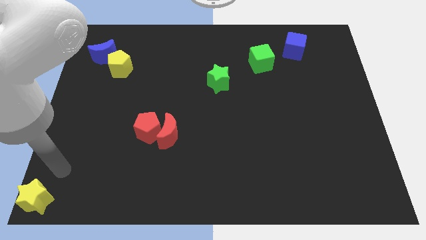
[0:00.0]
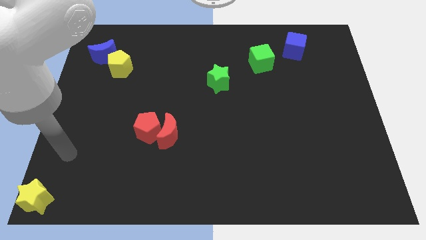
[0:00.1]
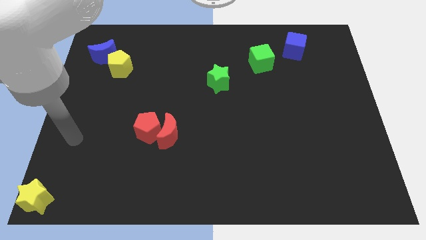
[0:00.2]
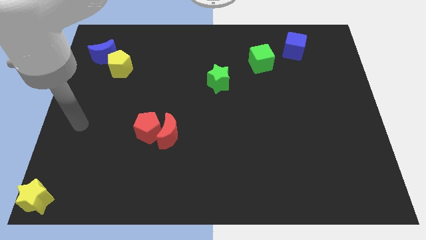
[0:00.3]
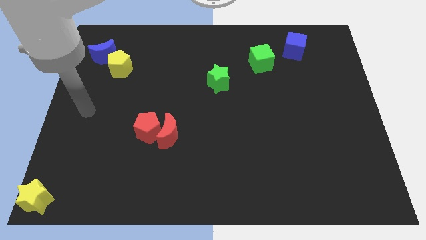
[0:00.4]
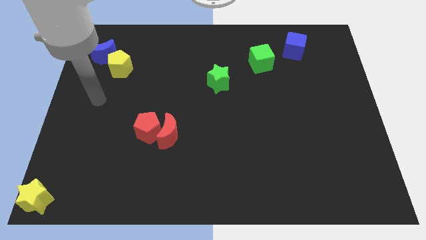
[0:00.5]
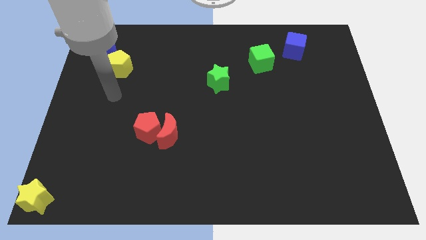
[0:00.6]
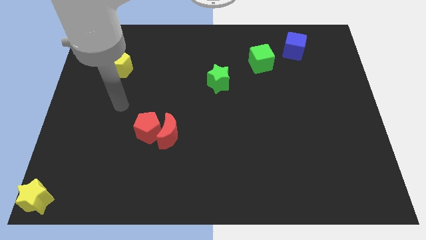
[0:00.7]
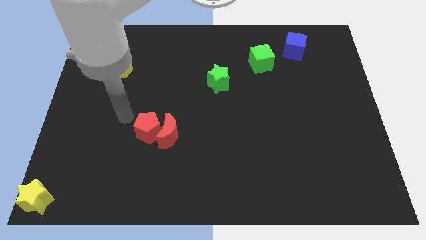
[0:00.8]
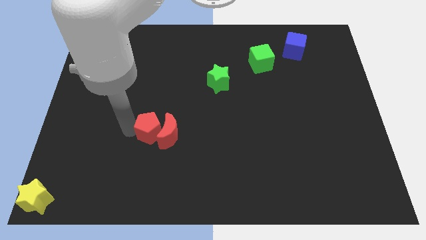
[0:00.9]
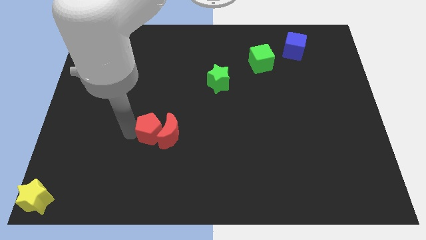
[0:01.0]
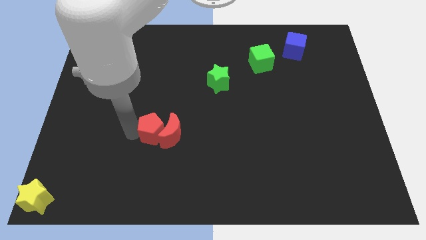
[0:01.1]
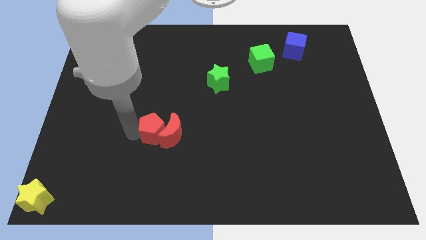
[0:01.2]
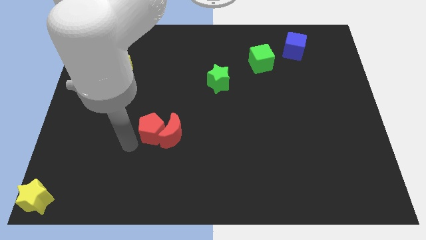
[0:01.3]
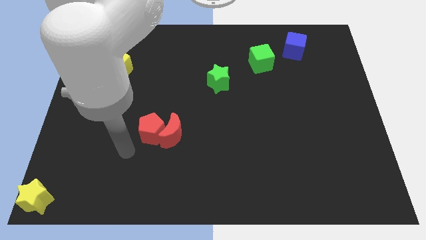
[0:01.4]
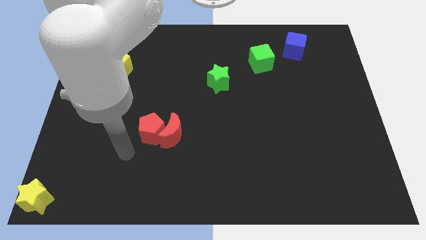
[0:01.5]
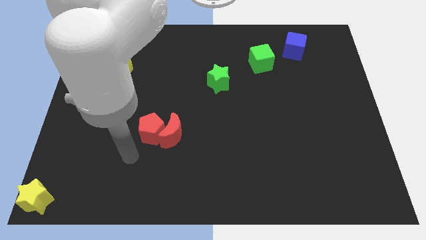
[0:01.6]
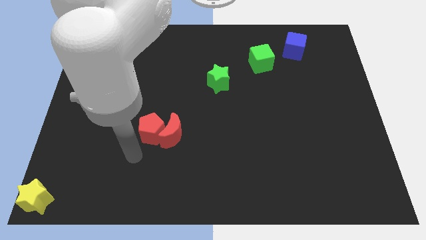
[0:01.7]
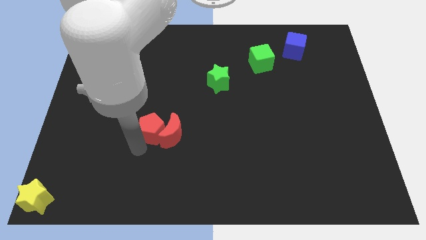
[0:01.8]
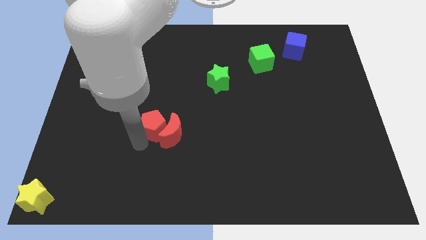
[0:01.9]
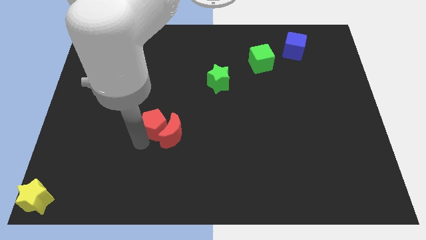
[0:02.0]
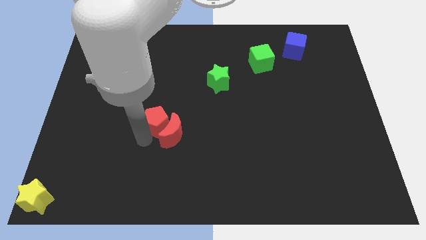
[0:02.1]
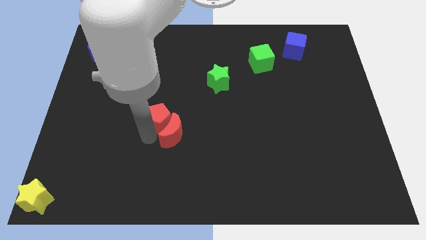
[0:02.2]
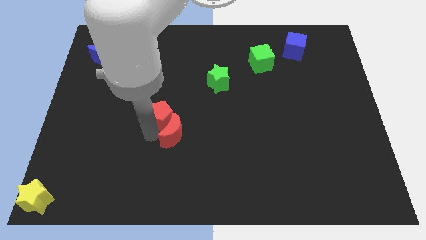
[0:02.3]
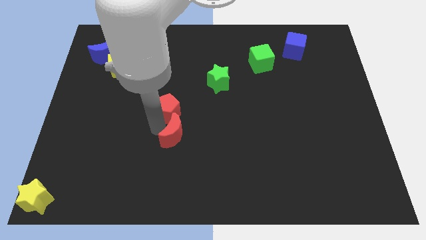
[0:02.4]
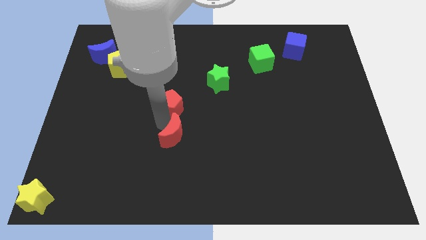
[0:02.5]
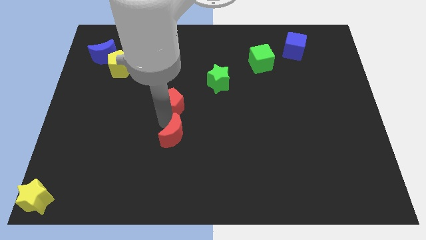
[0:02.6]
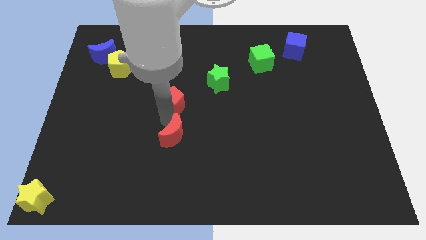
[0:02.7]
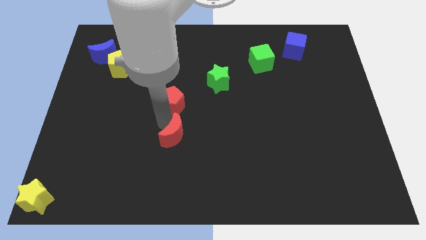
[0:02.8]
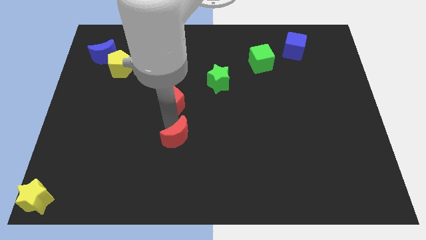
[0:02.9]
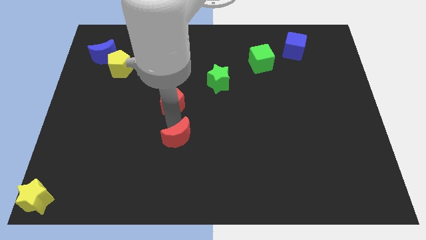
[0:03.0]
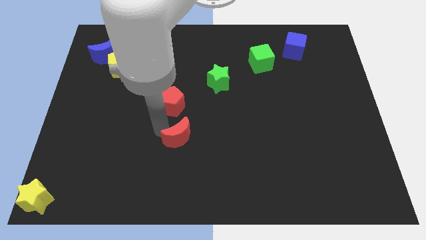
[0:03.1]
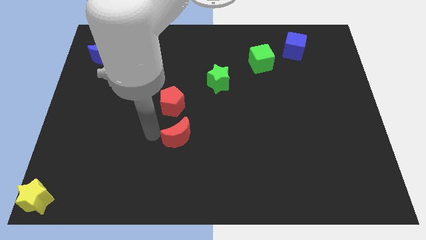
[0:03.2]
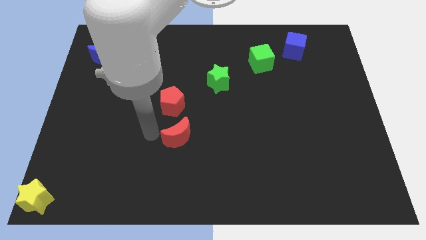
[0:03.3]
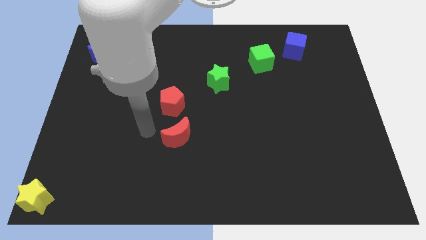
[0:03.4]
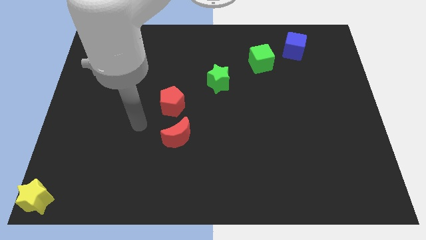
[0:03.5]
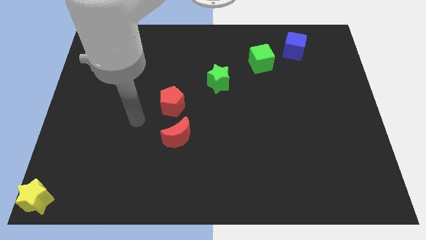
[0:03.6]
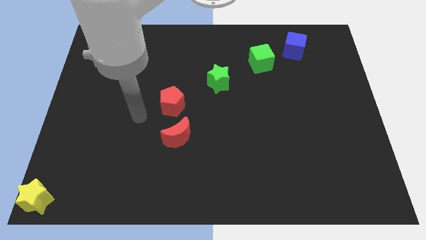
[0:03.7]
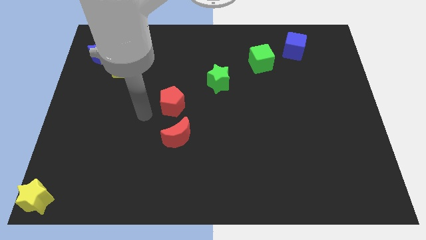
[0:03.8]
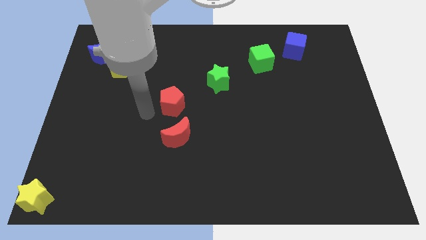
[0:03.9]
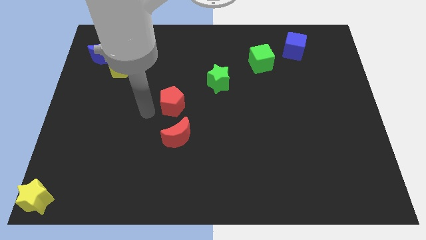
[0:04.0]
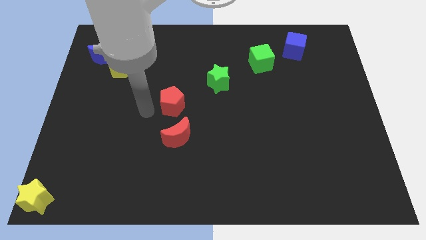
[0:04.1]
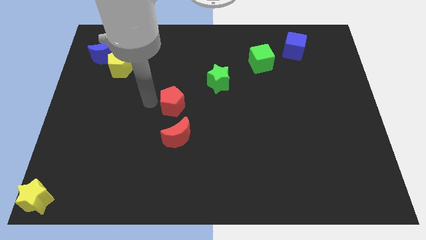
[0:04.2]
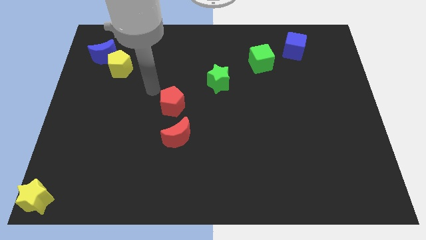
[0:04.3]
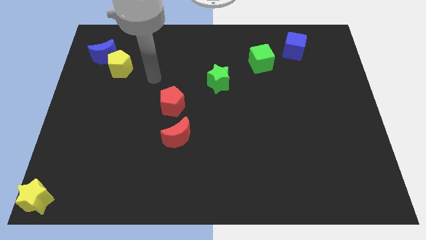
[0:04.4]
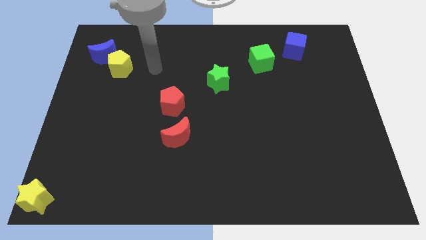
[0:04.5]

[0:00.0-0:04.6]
push the red pentagon above the red crescebt

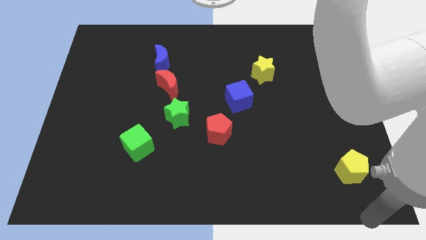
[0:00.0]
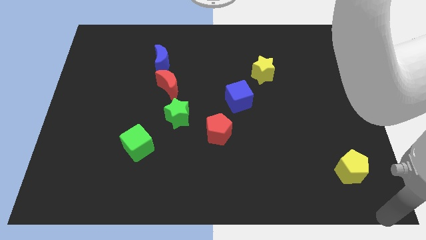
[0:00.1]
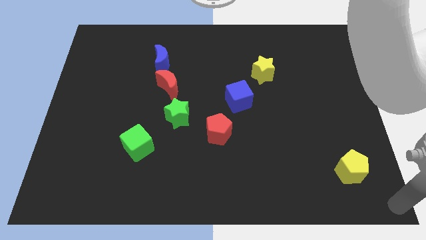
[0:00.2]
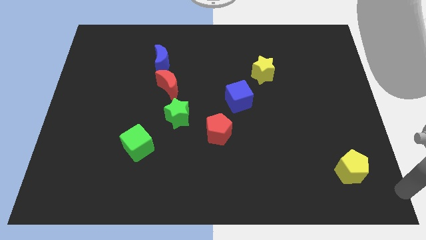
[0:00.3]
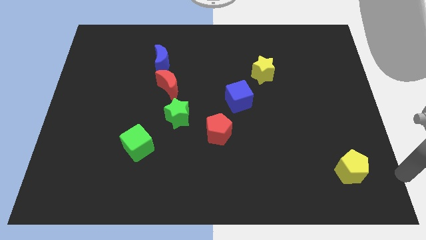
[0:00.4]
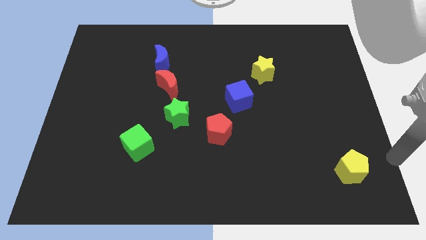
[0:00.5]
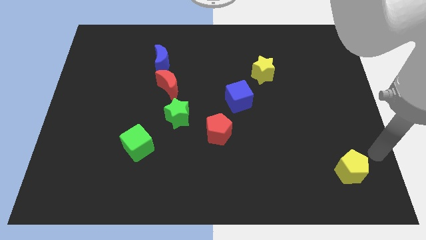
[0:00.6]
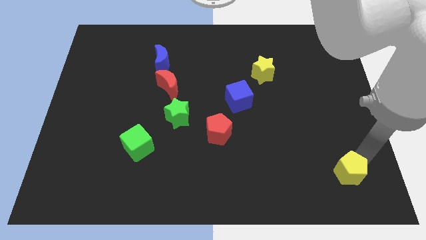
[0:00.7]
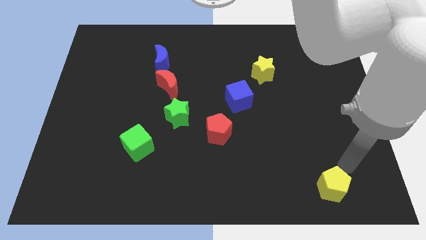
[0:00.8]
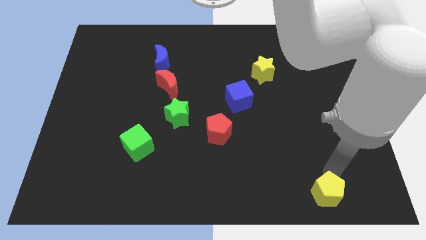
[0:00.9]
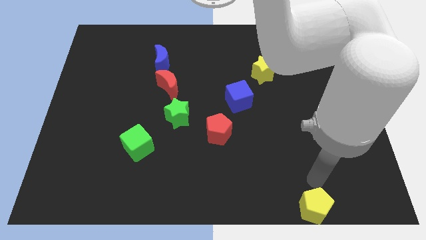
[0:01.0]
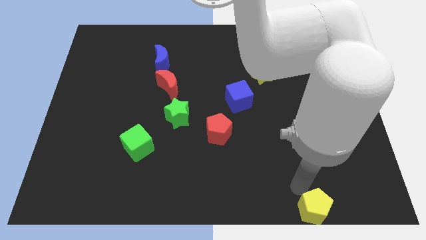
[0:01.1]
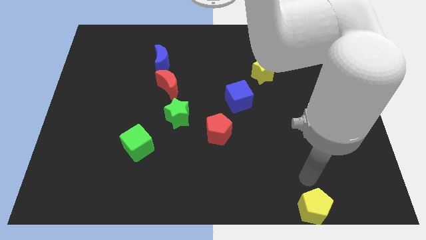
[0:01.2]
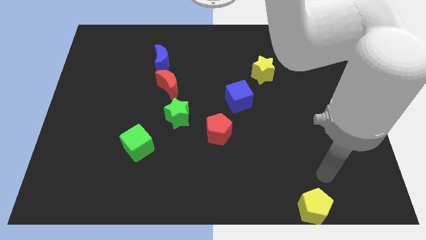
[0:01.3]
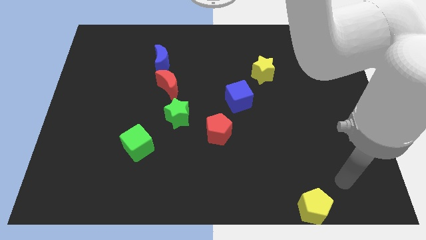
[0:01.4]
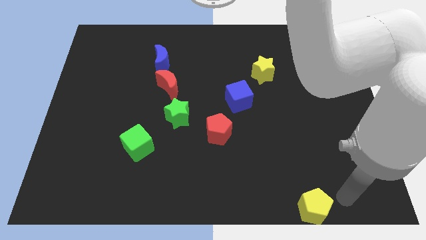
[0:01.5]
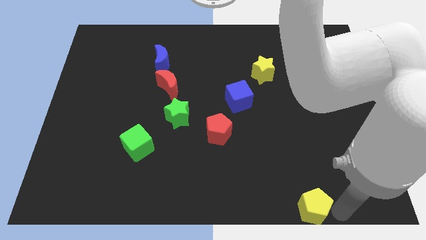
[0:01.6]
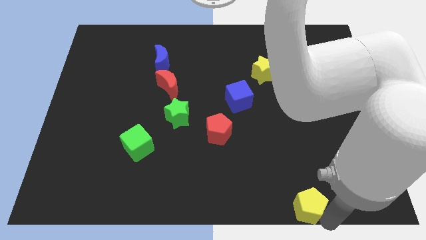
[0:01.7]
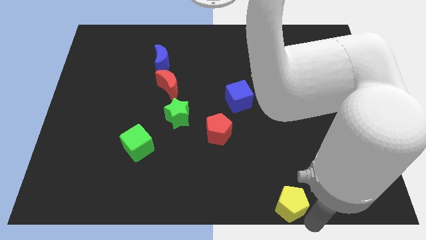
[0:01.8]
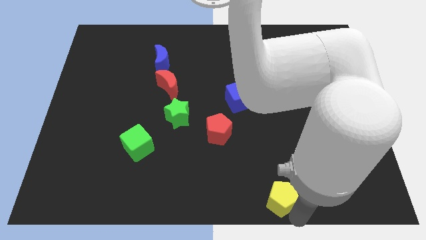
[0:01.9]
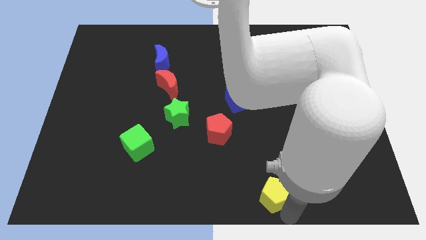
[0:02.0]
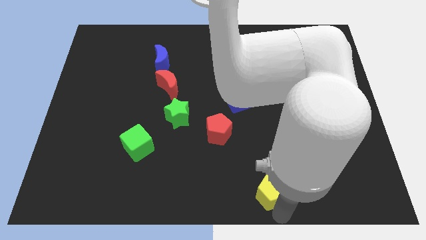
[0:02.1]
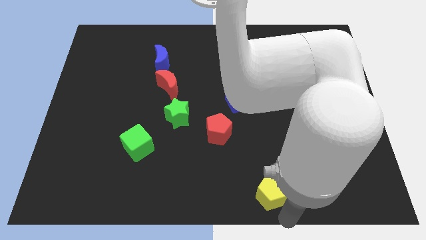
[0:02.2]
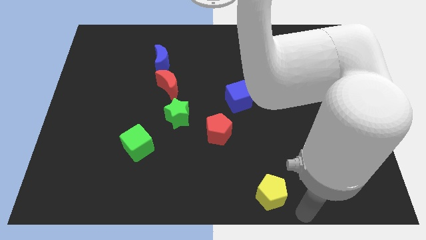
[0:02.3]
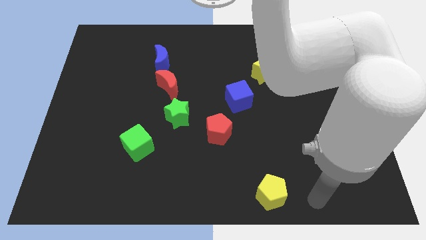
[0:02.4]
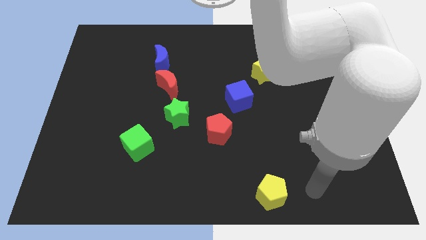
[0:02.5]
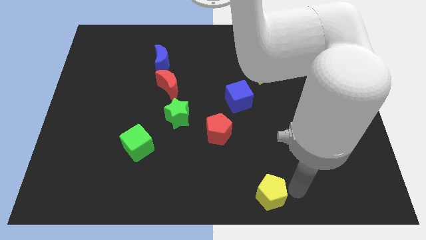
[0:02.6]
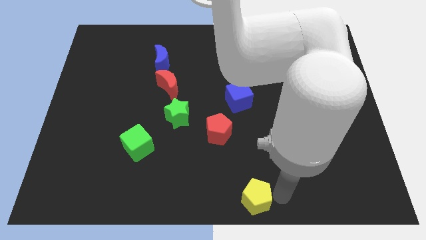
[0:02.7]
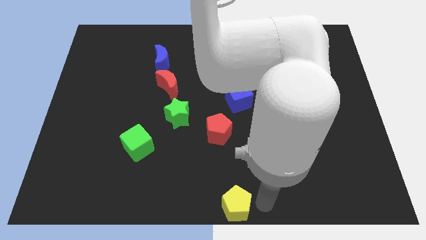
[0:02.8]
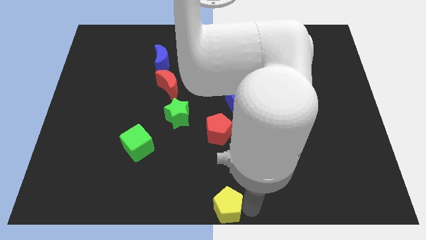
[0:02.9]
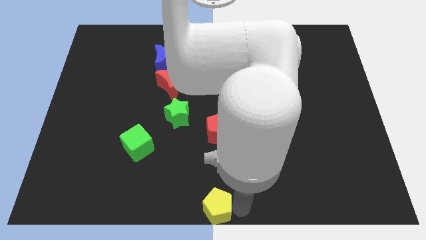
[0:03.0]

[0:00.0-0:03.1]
place the yellow pentagon down to the red pentagon

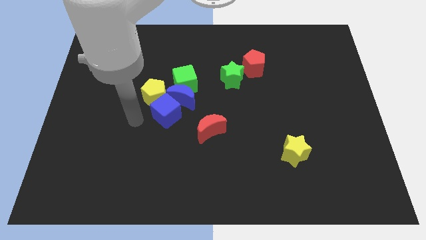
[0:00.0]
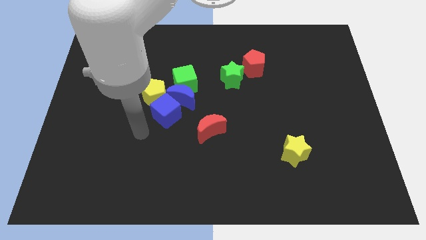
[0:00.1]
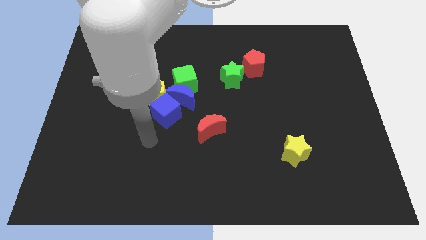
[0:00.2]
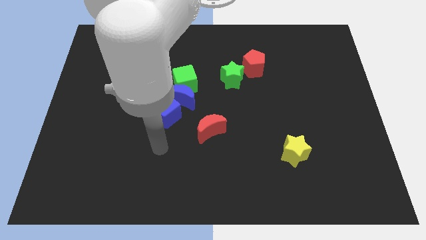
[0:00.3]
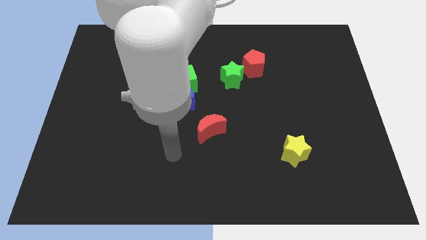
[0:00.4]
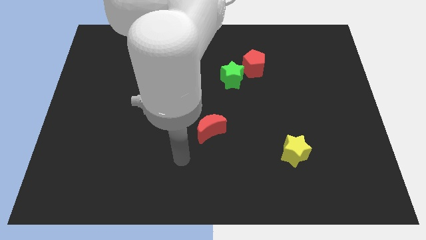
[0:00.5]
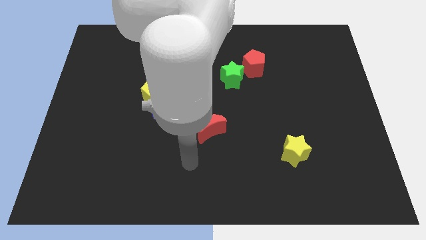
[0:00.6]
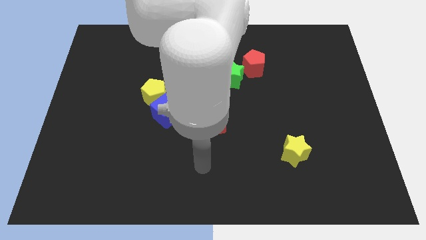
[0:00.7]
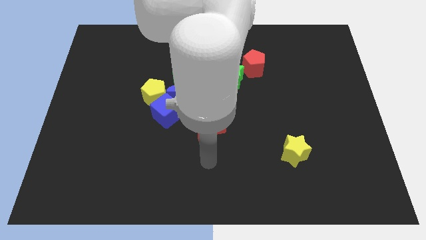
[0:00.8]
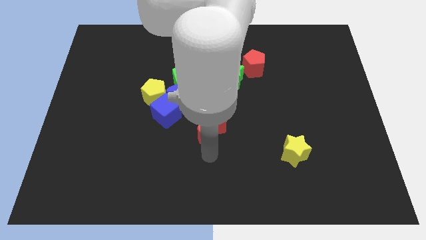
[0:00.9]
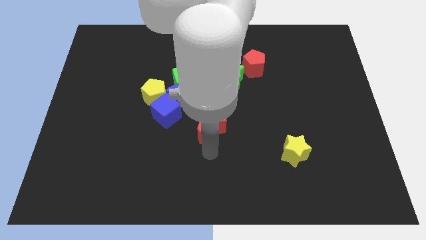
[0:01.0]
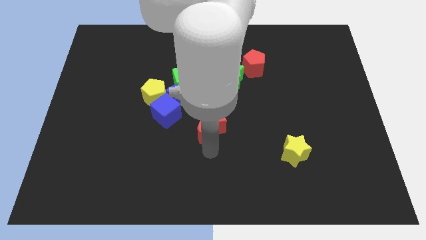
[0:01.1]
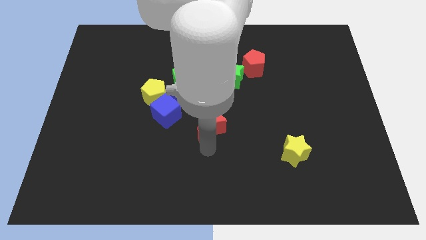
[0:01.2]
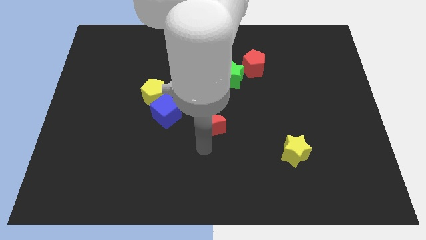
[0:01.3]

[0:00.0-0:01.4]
move the arm towards the bottom of the red crescent
